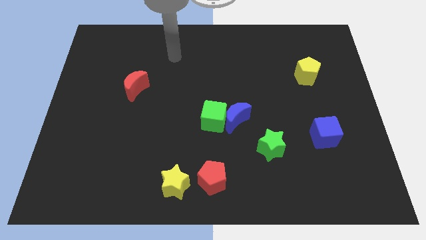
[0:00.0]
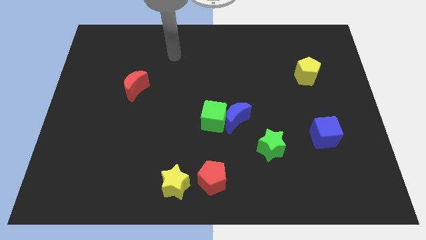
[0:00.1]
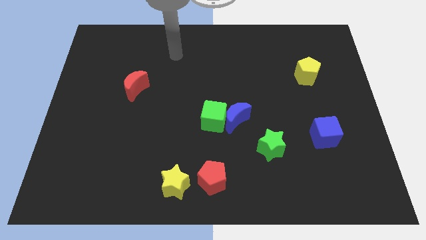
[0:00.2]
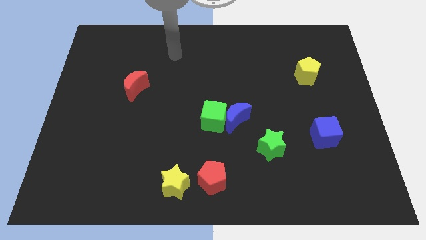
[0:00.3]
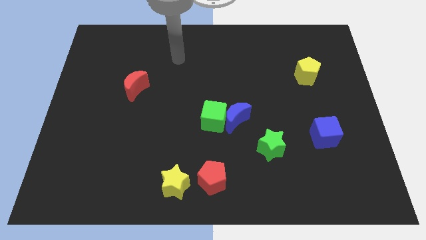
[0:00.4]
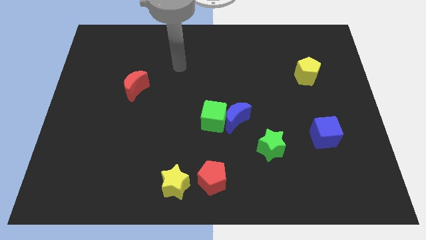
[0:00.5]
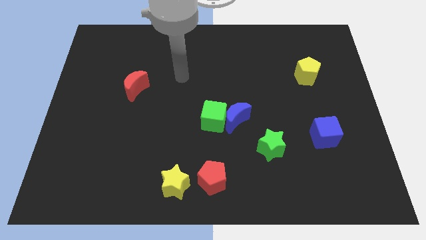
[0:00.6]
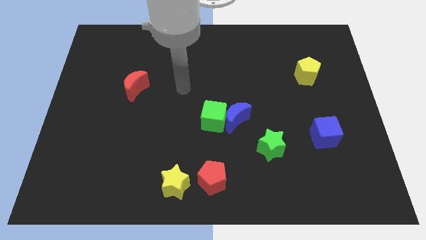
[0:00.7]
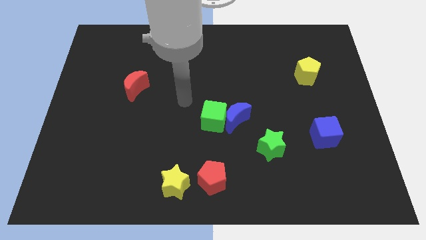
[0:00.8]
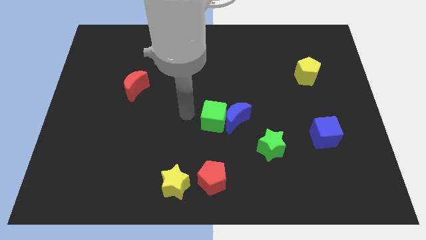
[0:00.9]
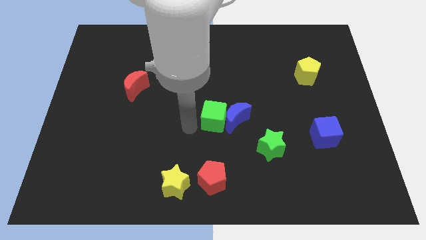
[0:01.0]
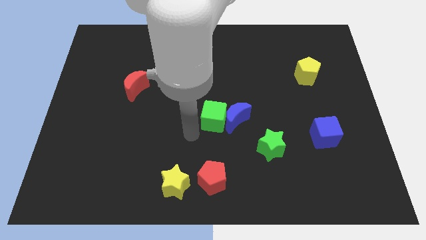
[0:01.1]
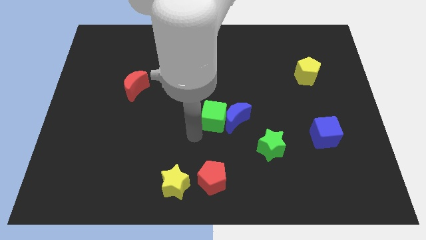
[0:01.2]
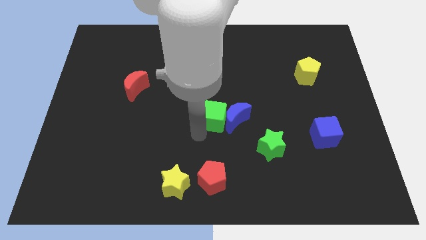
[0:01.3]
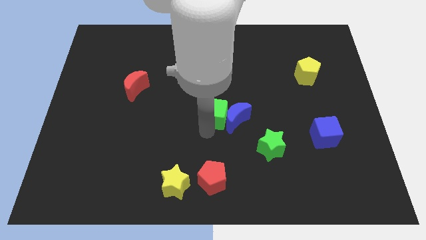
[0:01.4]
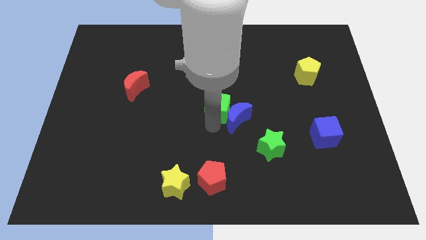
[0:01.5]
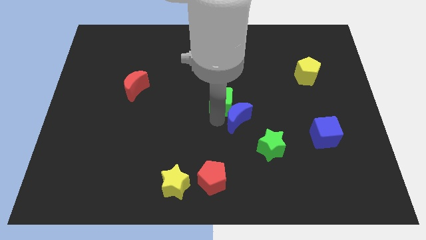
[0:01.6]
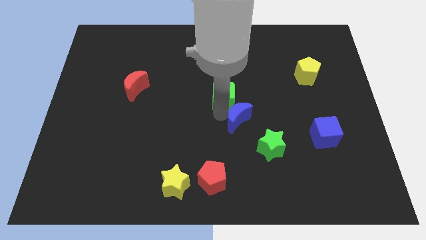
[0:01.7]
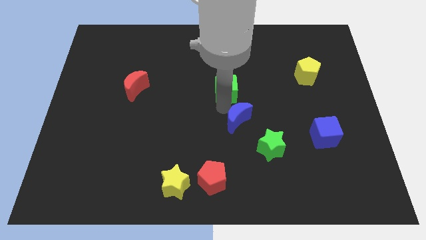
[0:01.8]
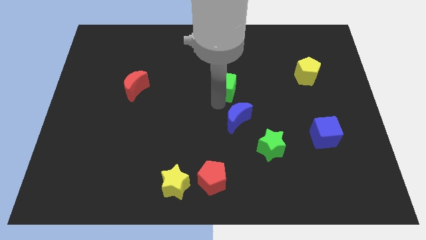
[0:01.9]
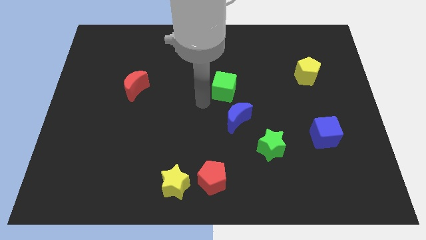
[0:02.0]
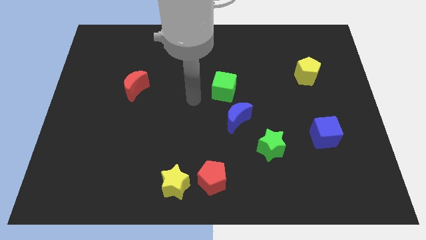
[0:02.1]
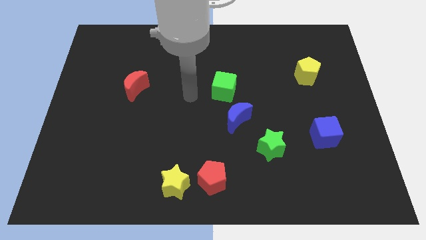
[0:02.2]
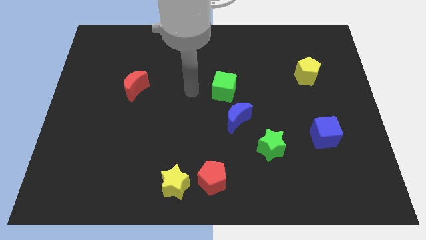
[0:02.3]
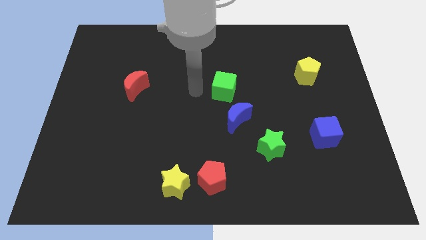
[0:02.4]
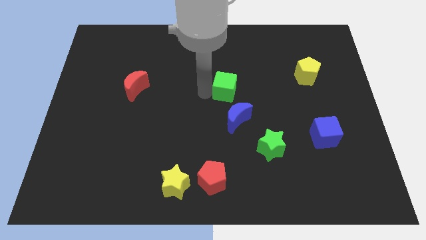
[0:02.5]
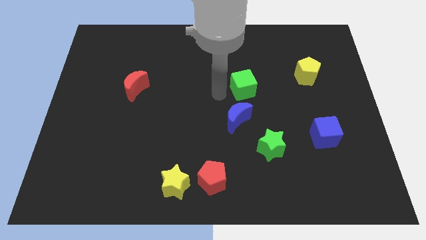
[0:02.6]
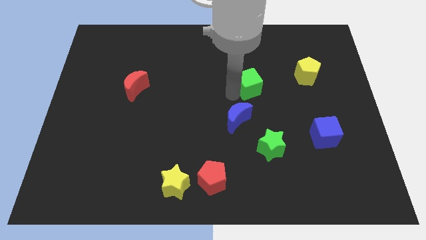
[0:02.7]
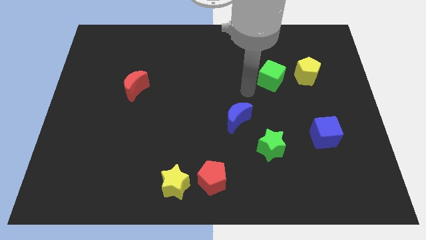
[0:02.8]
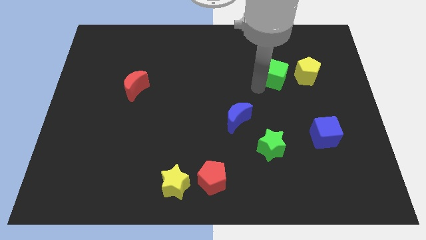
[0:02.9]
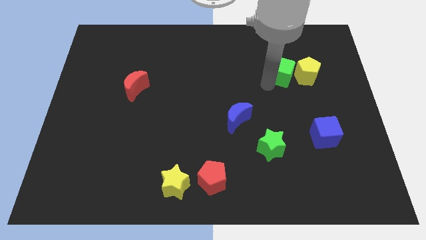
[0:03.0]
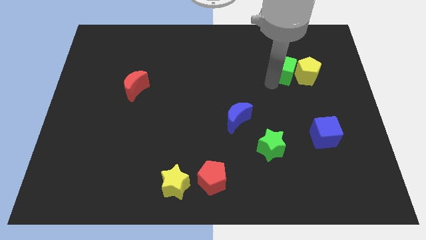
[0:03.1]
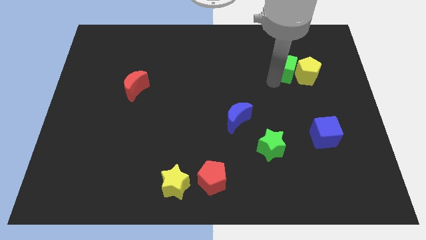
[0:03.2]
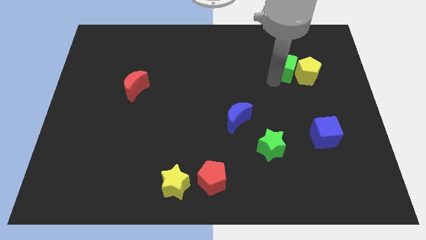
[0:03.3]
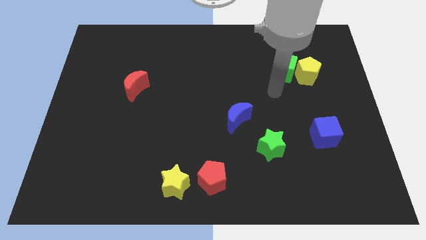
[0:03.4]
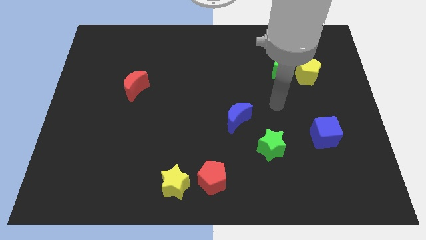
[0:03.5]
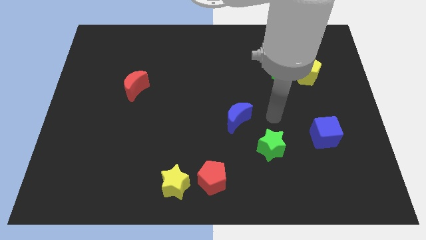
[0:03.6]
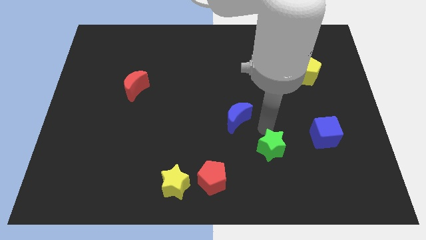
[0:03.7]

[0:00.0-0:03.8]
move the green cube to the left of the yellow pentagon

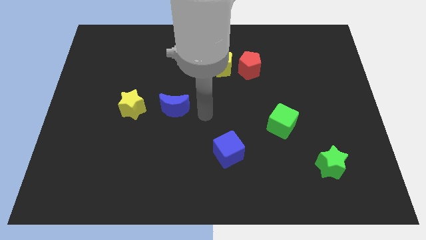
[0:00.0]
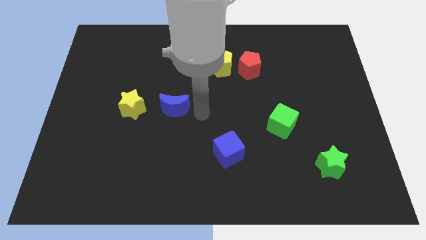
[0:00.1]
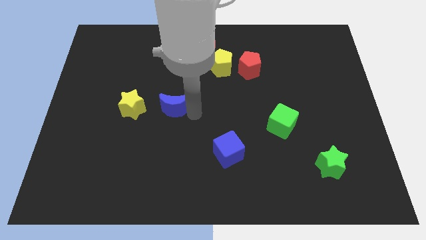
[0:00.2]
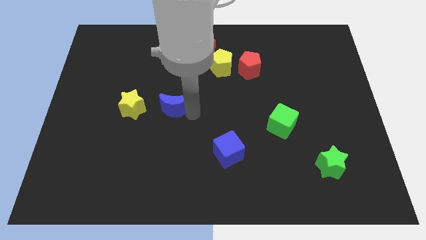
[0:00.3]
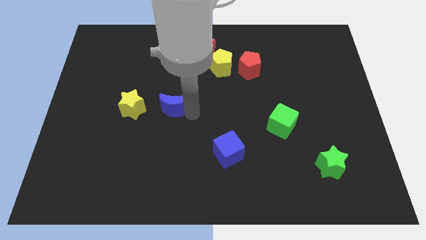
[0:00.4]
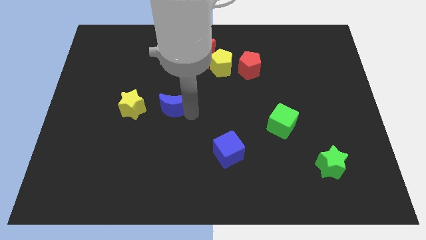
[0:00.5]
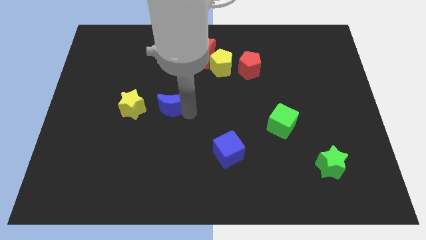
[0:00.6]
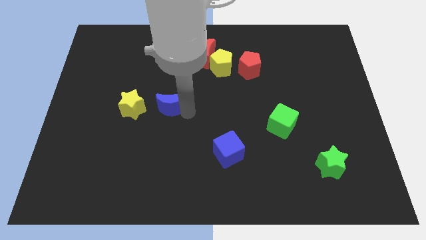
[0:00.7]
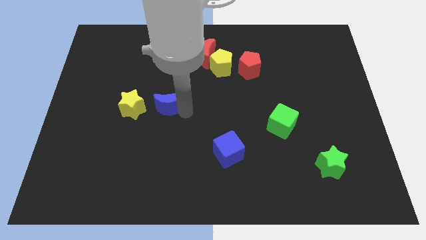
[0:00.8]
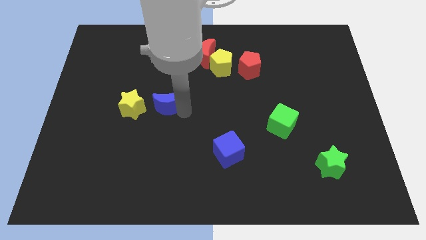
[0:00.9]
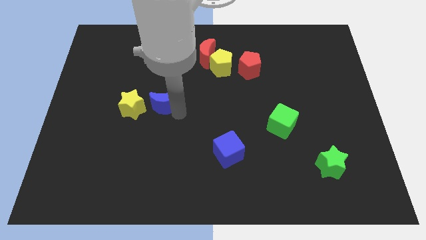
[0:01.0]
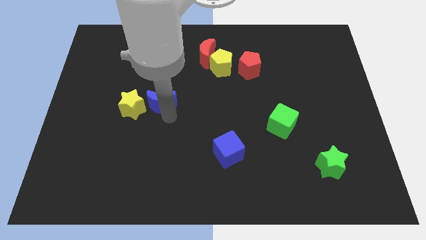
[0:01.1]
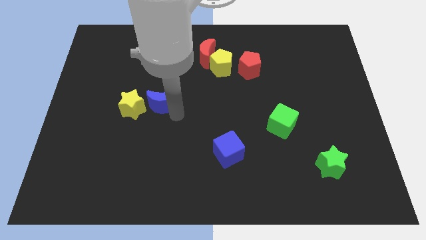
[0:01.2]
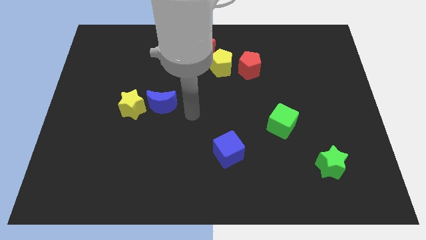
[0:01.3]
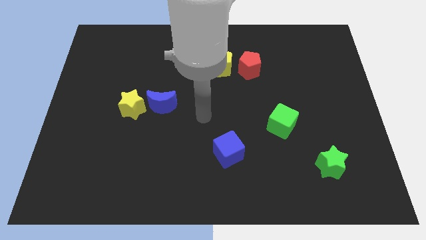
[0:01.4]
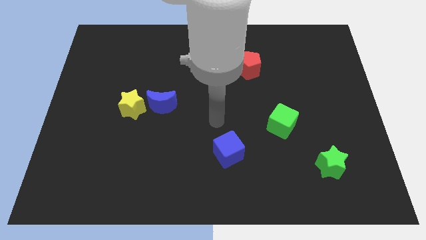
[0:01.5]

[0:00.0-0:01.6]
place the blue crescent right to the yellow star

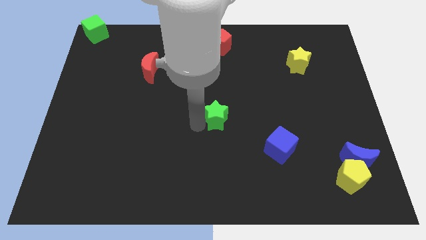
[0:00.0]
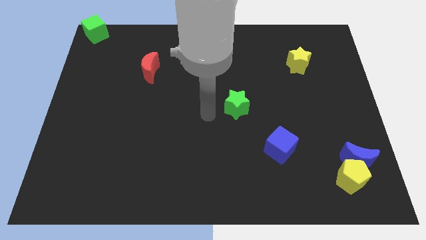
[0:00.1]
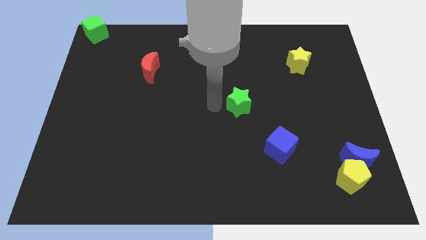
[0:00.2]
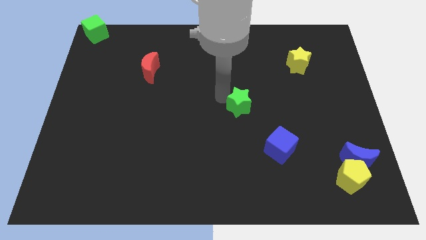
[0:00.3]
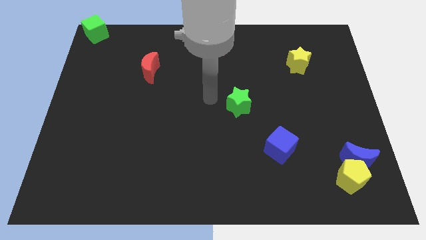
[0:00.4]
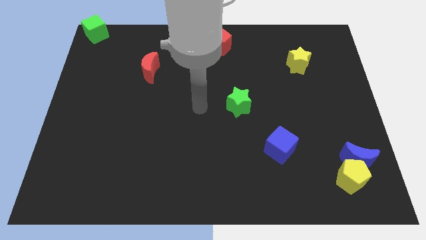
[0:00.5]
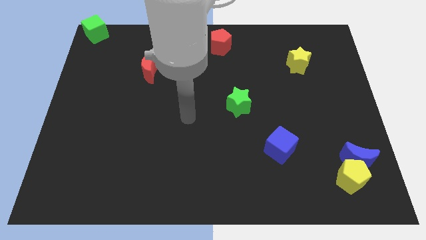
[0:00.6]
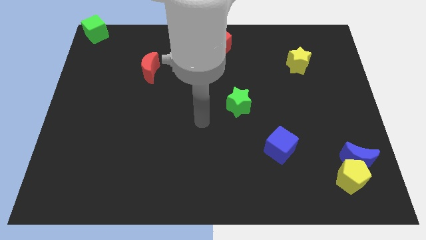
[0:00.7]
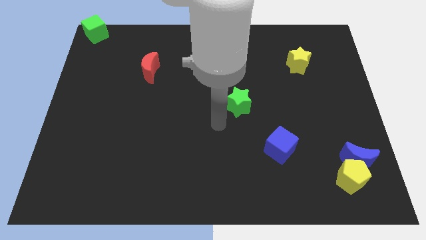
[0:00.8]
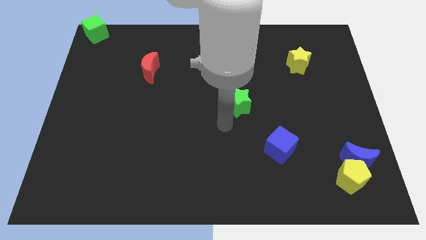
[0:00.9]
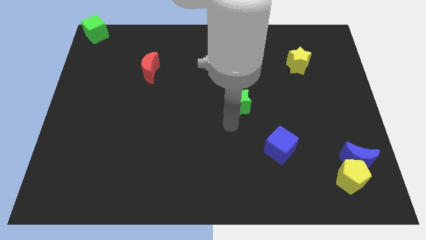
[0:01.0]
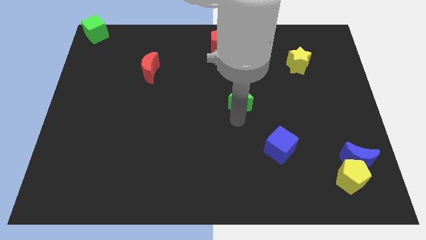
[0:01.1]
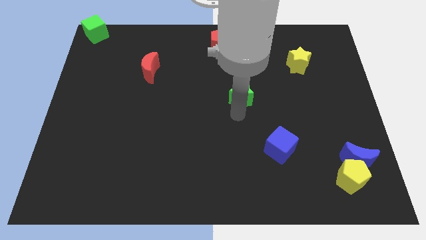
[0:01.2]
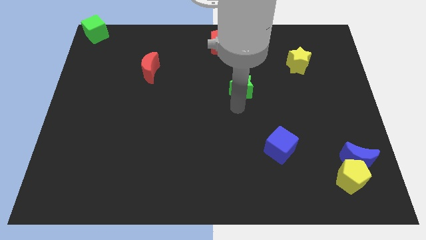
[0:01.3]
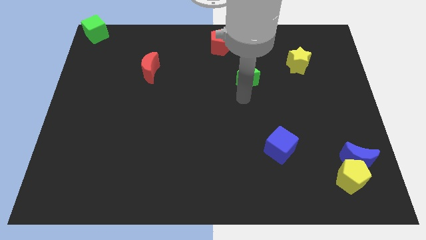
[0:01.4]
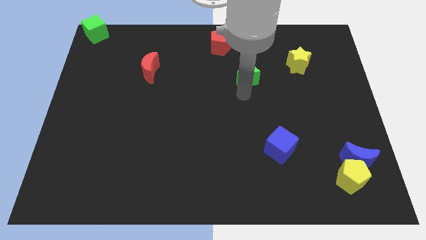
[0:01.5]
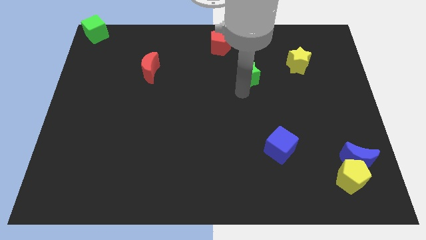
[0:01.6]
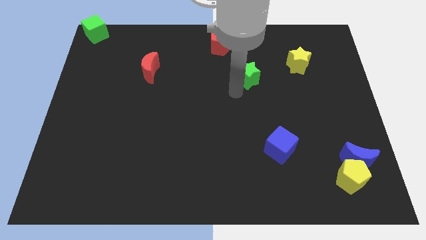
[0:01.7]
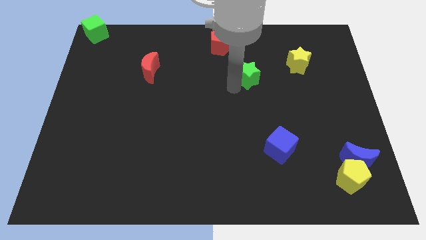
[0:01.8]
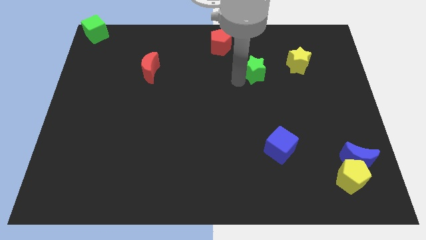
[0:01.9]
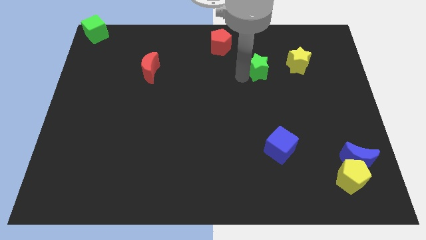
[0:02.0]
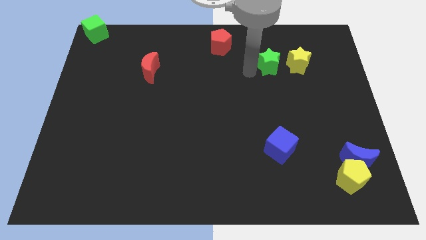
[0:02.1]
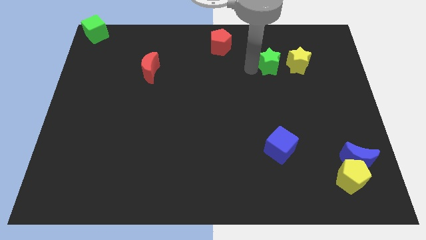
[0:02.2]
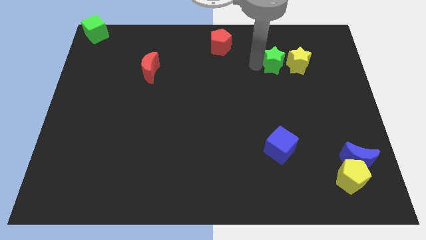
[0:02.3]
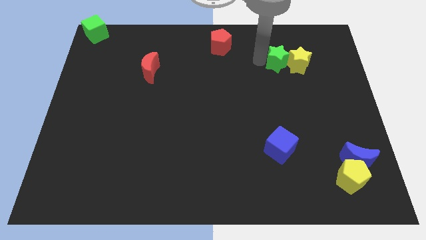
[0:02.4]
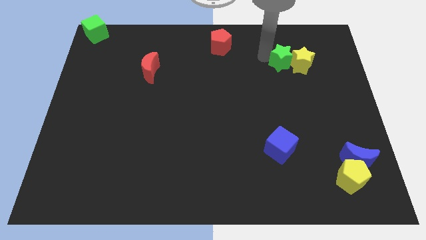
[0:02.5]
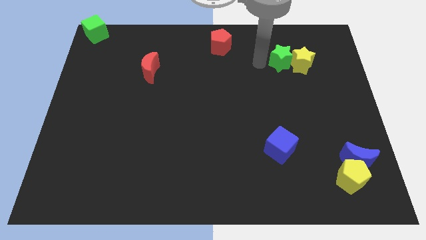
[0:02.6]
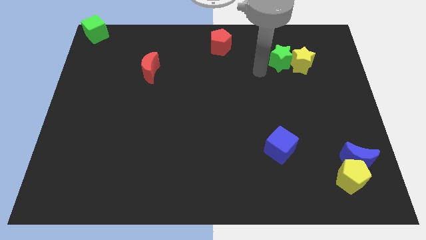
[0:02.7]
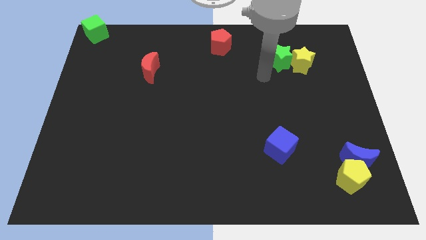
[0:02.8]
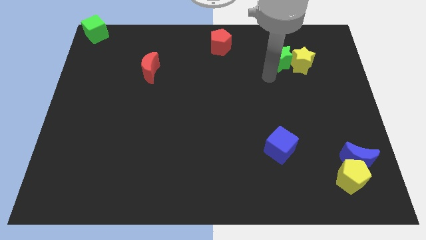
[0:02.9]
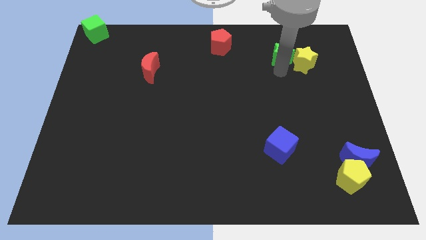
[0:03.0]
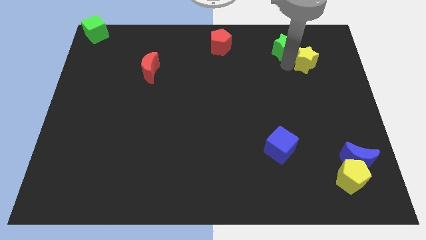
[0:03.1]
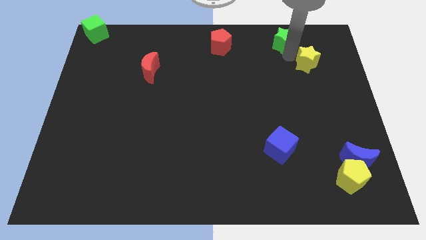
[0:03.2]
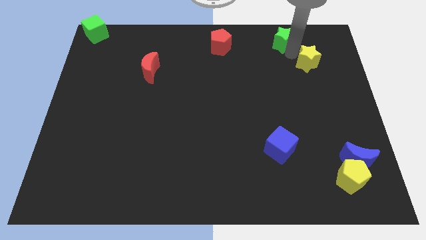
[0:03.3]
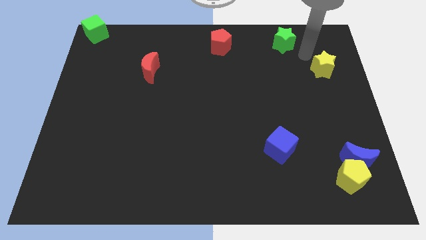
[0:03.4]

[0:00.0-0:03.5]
move green star into the yellow star

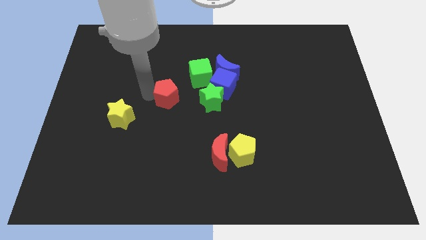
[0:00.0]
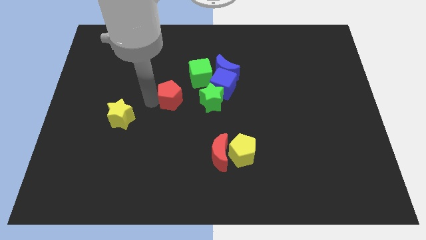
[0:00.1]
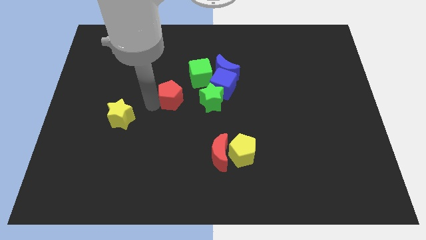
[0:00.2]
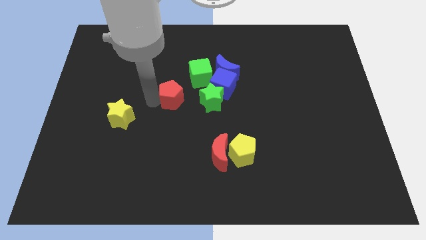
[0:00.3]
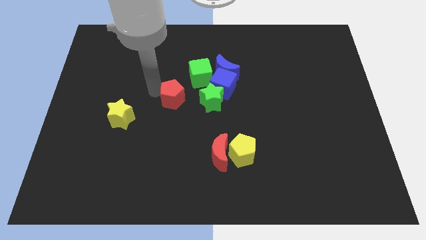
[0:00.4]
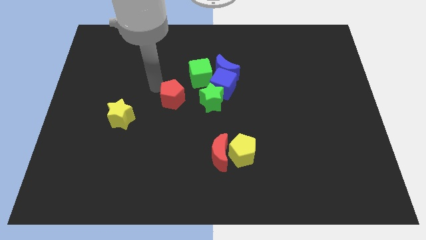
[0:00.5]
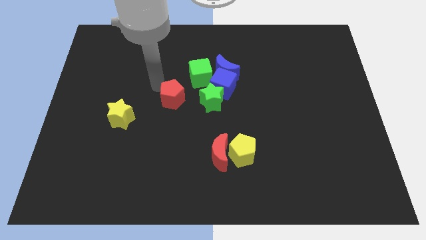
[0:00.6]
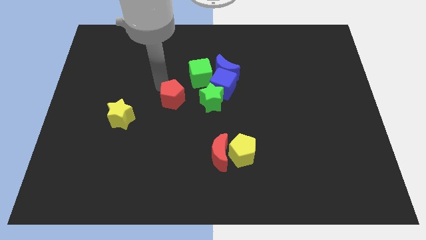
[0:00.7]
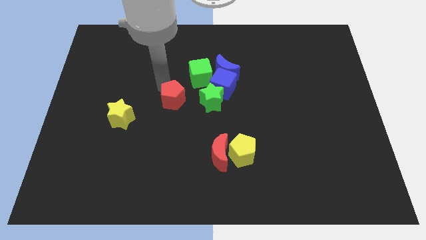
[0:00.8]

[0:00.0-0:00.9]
place the red pentagon to the left of the green star
